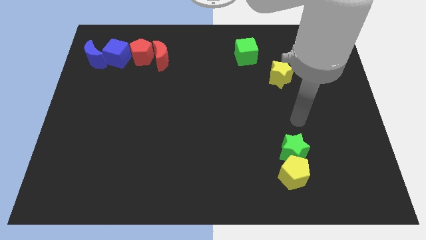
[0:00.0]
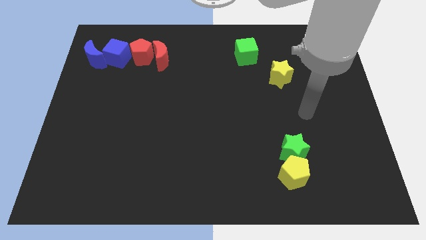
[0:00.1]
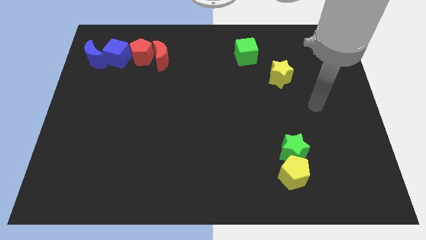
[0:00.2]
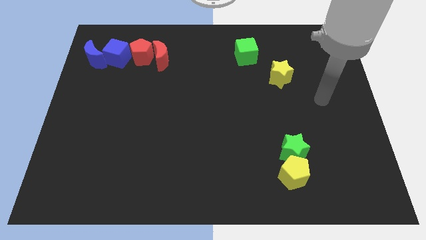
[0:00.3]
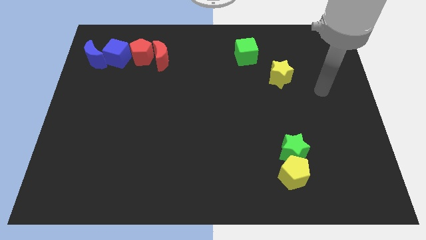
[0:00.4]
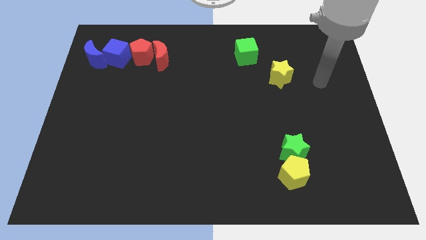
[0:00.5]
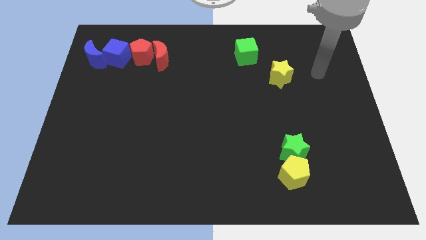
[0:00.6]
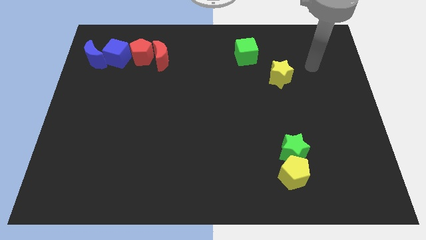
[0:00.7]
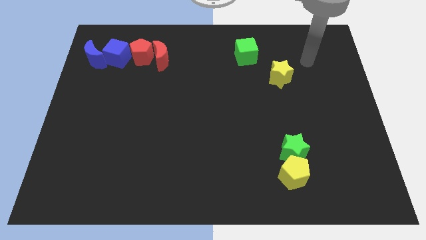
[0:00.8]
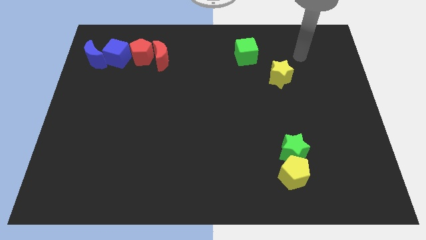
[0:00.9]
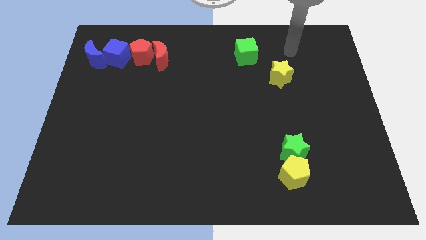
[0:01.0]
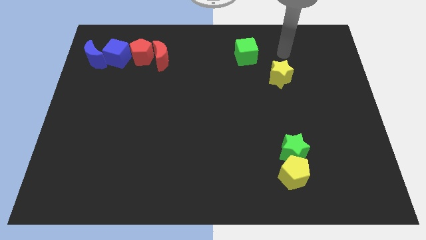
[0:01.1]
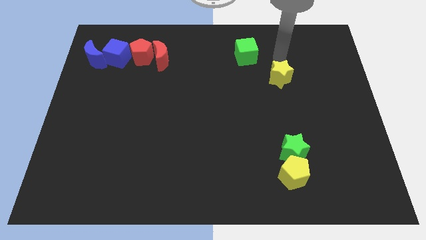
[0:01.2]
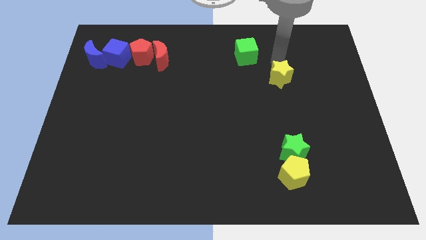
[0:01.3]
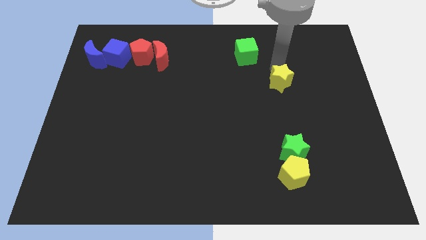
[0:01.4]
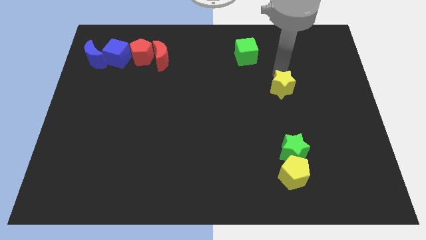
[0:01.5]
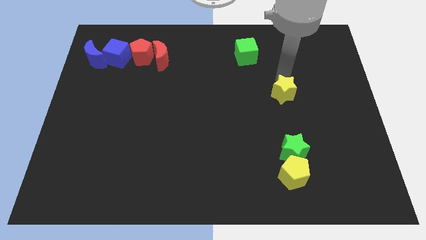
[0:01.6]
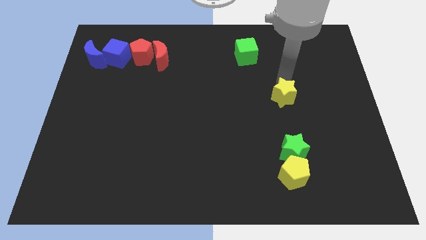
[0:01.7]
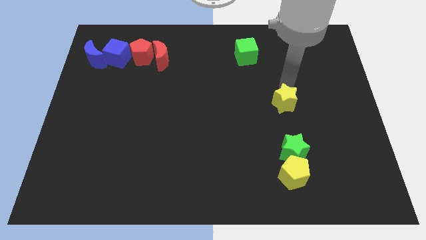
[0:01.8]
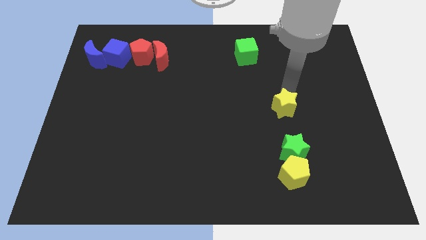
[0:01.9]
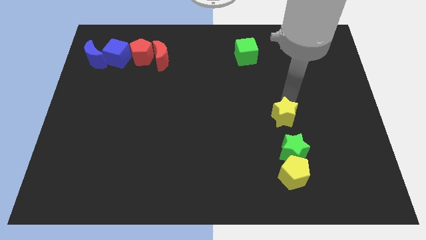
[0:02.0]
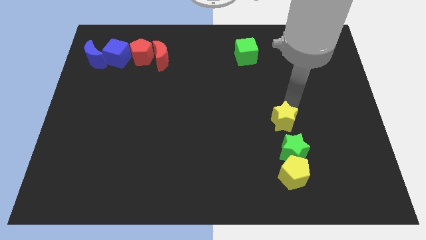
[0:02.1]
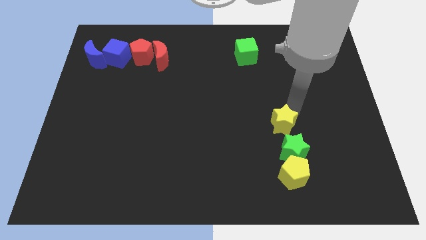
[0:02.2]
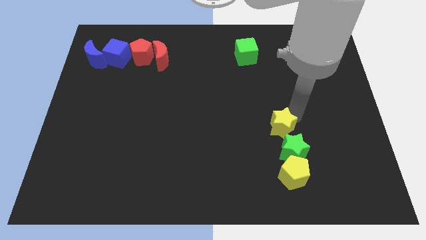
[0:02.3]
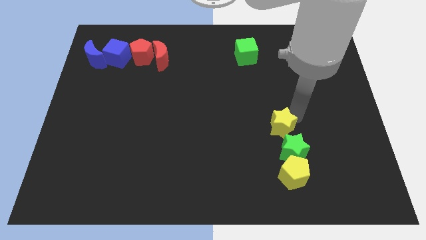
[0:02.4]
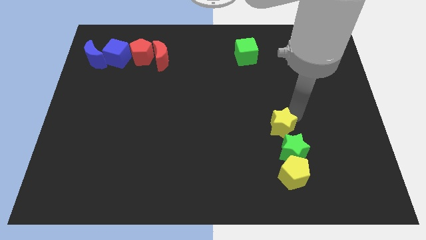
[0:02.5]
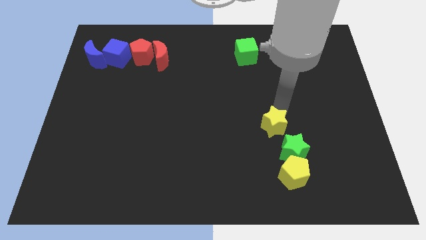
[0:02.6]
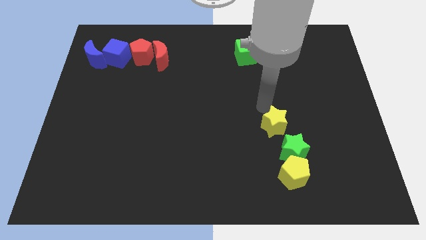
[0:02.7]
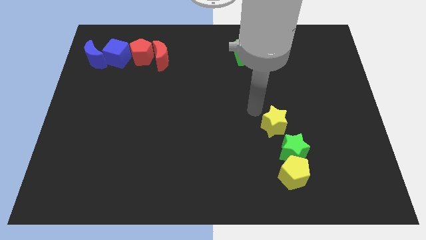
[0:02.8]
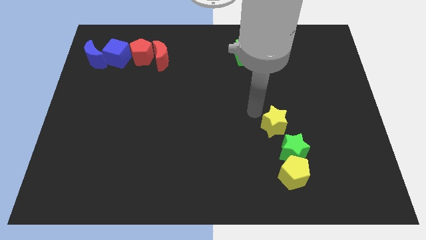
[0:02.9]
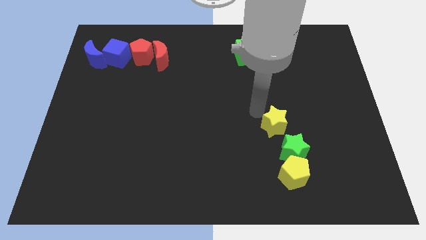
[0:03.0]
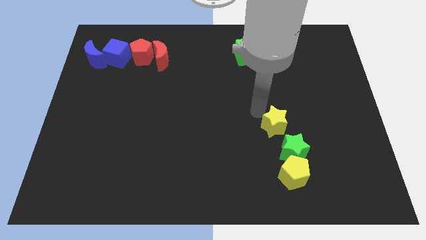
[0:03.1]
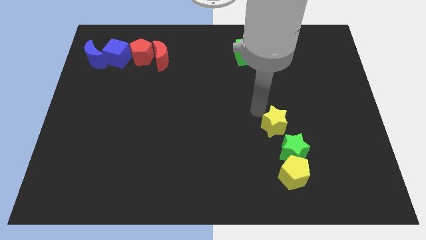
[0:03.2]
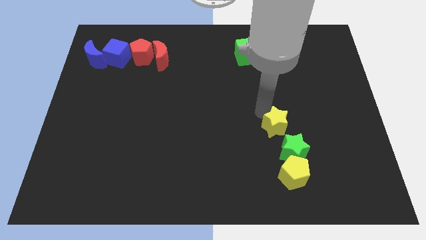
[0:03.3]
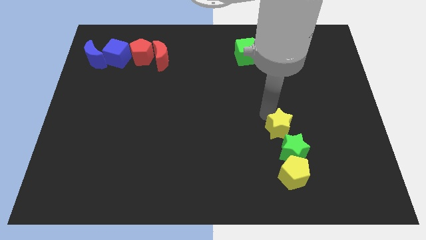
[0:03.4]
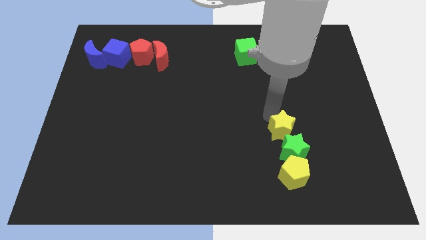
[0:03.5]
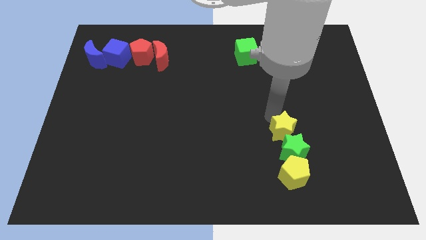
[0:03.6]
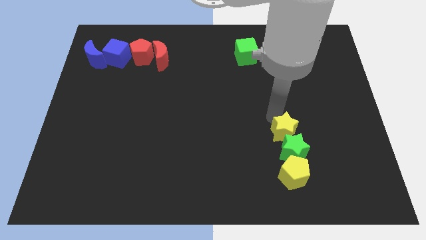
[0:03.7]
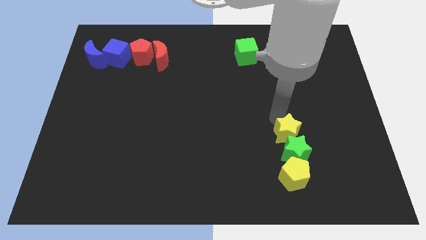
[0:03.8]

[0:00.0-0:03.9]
place the yellow star above the green star

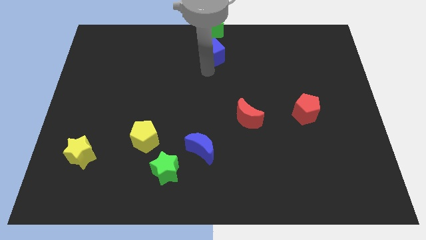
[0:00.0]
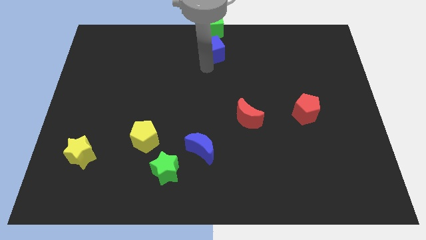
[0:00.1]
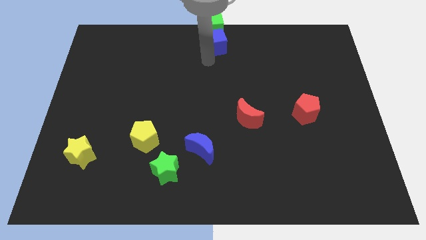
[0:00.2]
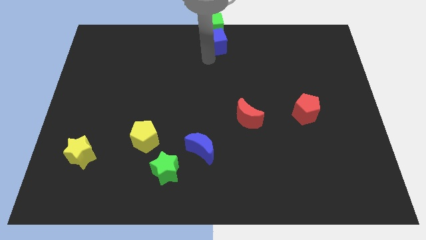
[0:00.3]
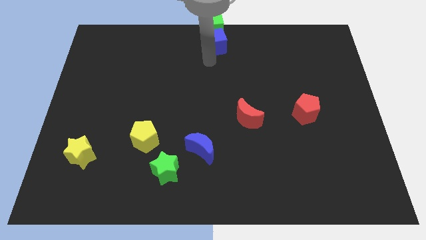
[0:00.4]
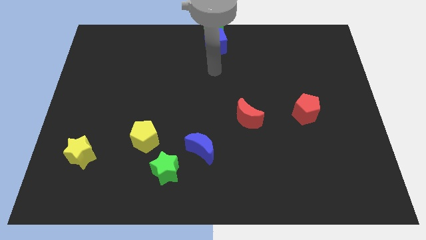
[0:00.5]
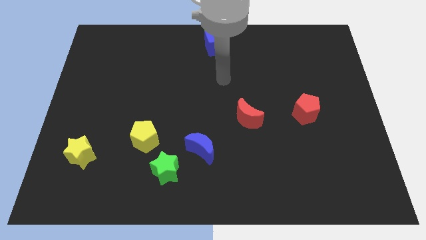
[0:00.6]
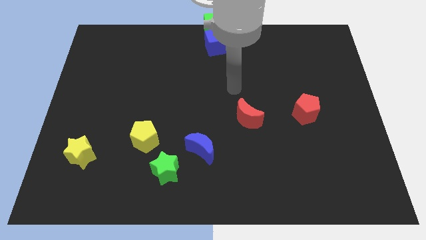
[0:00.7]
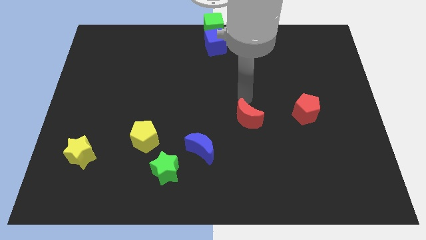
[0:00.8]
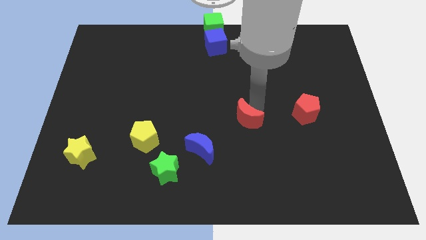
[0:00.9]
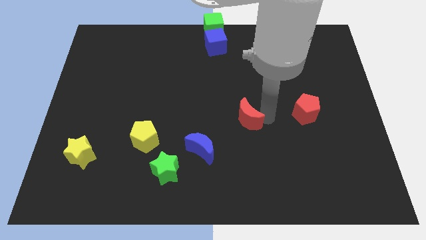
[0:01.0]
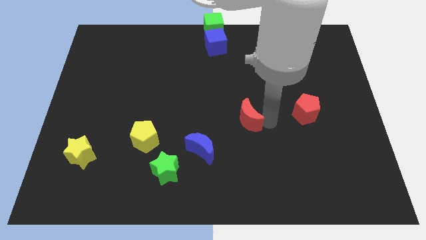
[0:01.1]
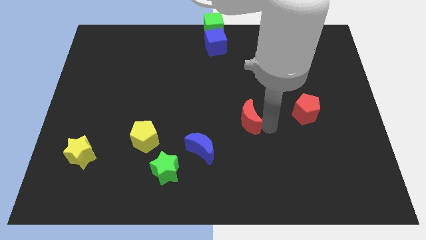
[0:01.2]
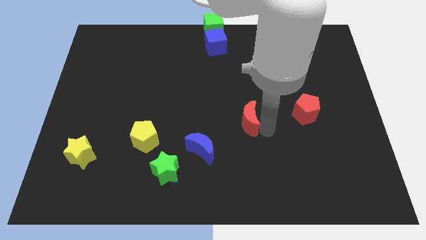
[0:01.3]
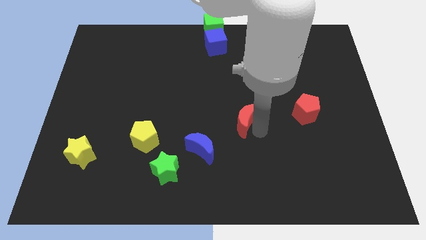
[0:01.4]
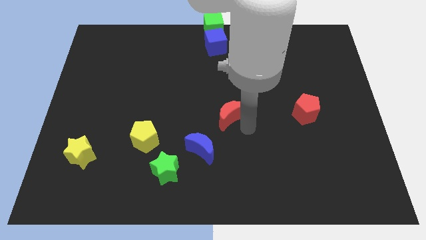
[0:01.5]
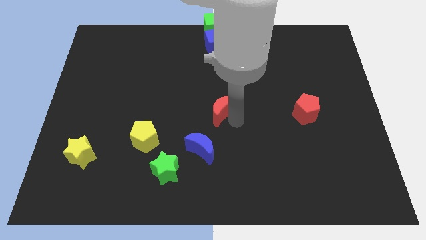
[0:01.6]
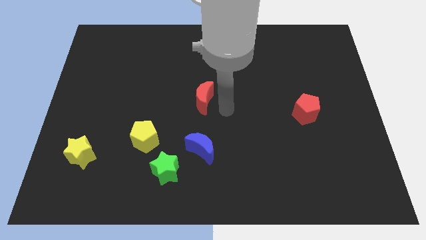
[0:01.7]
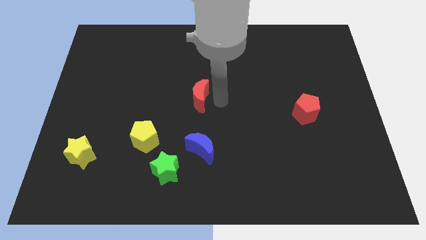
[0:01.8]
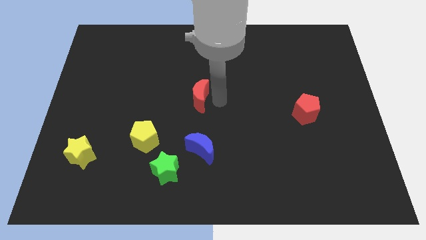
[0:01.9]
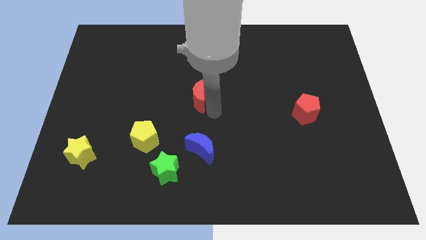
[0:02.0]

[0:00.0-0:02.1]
move the red crescent towards slightly top

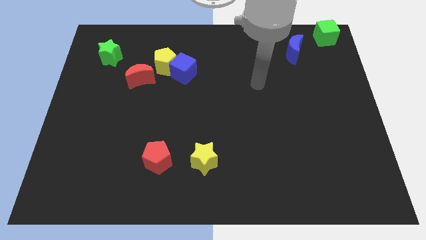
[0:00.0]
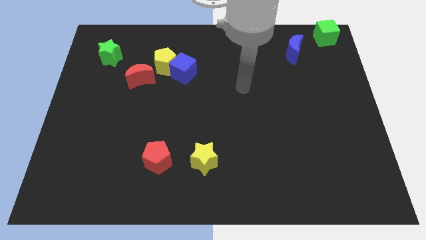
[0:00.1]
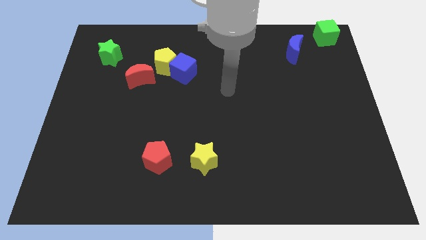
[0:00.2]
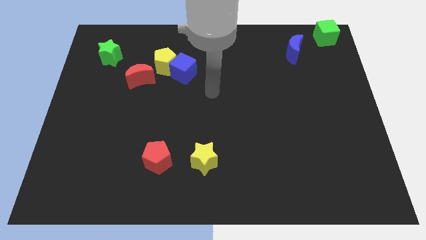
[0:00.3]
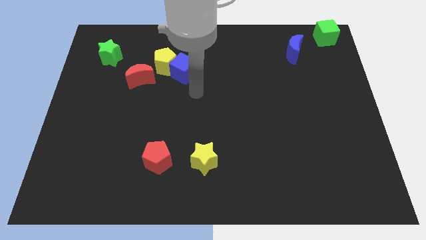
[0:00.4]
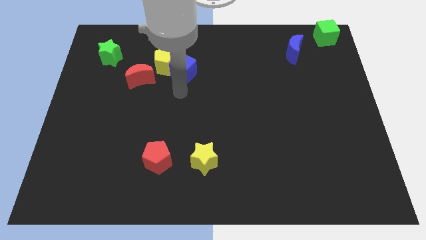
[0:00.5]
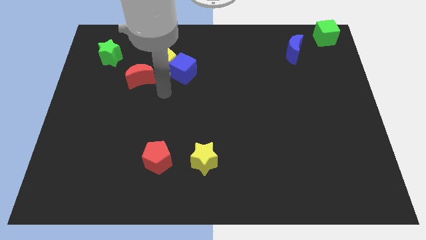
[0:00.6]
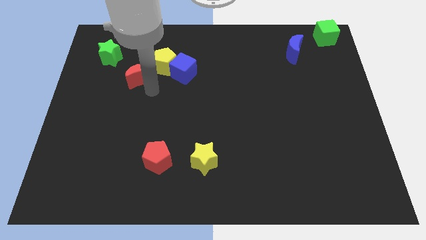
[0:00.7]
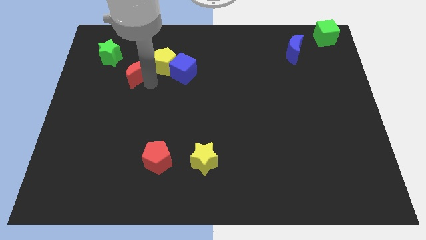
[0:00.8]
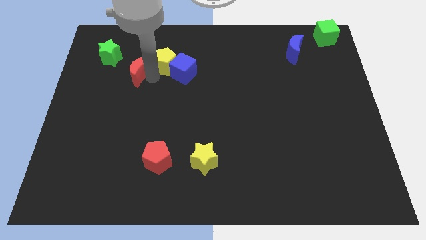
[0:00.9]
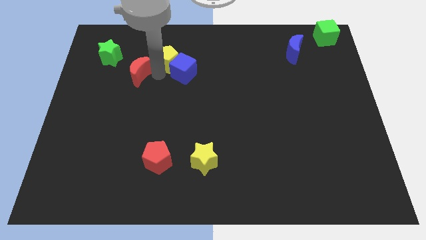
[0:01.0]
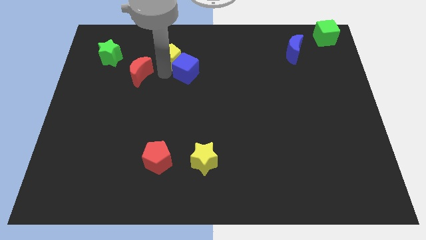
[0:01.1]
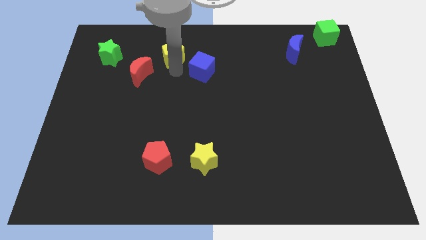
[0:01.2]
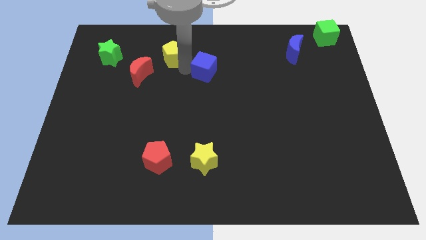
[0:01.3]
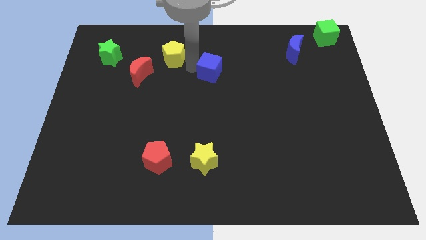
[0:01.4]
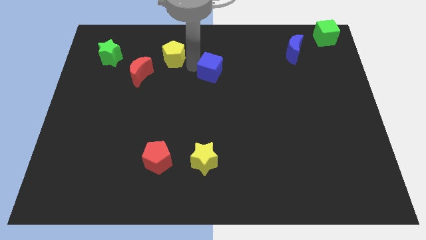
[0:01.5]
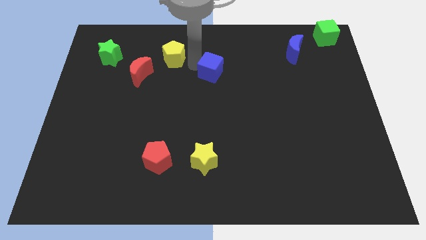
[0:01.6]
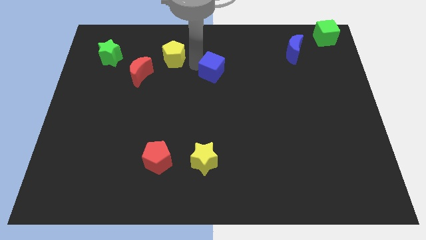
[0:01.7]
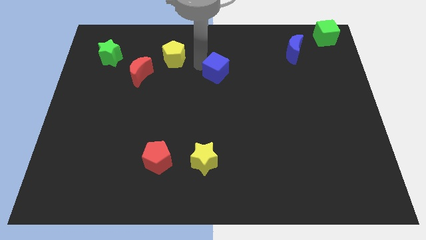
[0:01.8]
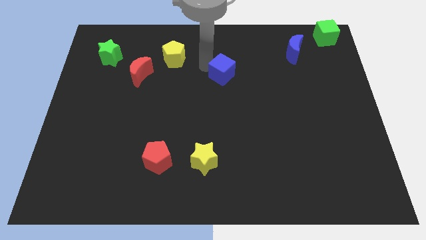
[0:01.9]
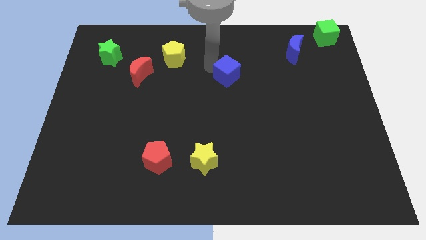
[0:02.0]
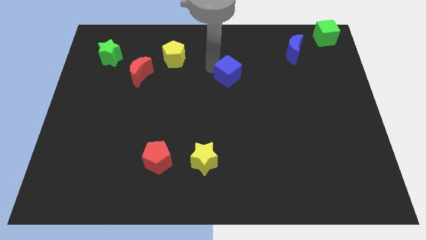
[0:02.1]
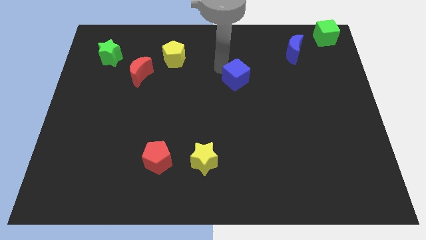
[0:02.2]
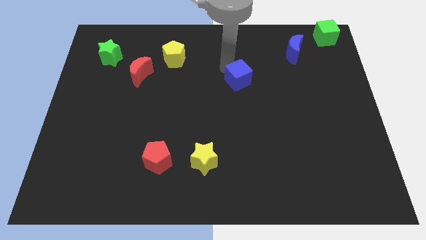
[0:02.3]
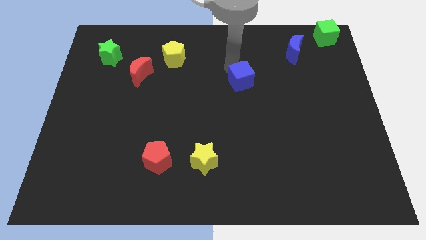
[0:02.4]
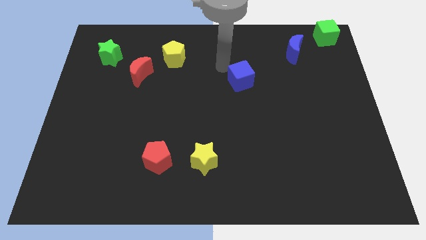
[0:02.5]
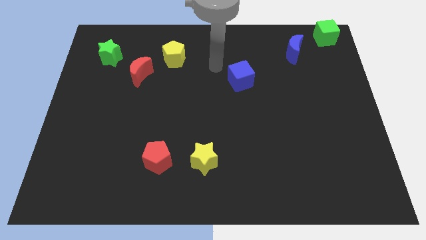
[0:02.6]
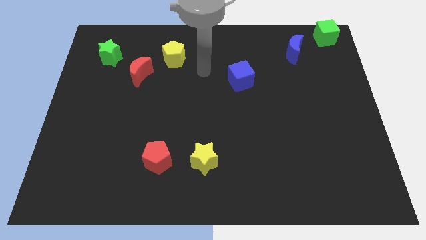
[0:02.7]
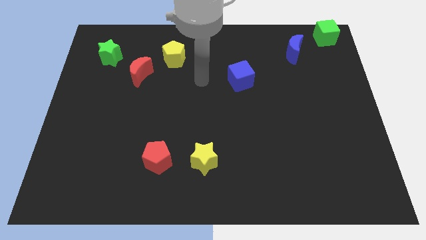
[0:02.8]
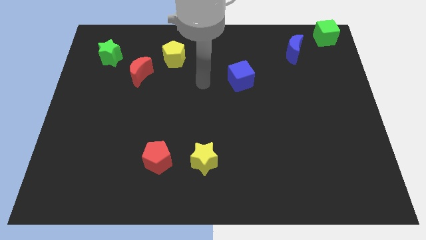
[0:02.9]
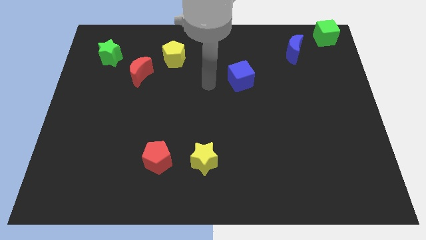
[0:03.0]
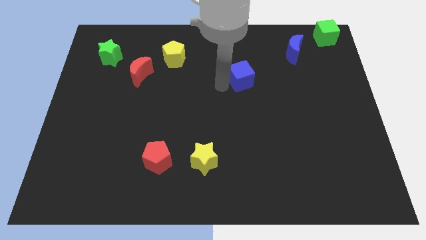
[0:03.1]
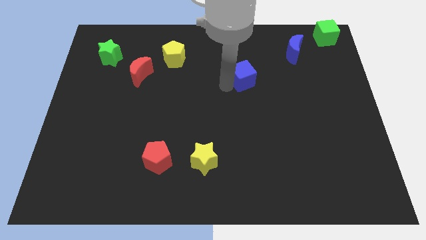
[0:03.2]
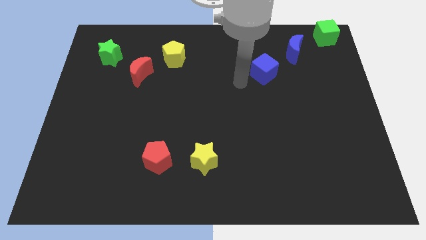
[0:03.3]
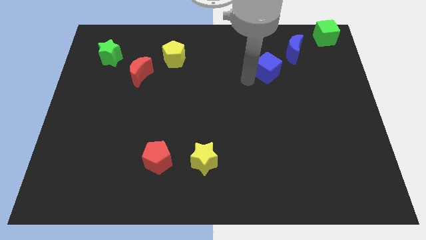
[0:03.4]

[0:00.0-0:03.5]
separate the blue cube from the yellow pentagon
